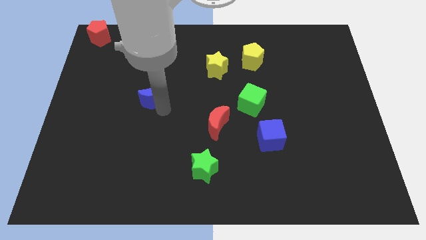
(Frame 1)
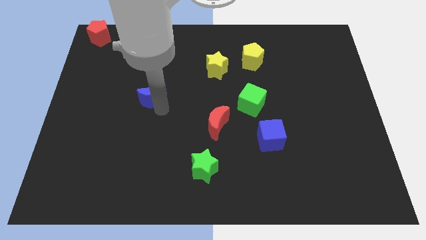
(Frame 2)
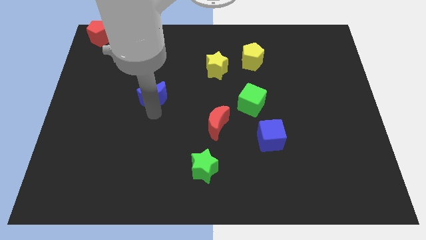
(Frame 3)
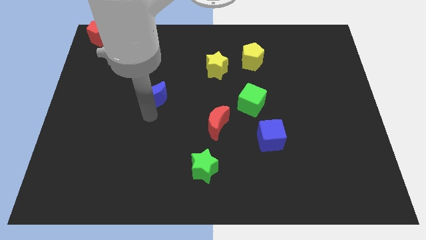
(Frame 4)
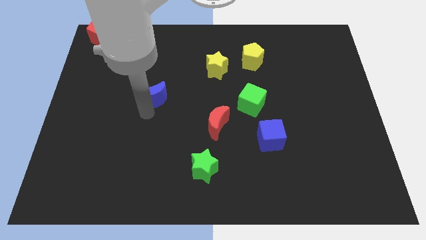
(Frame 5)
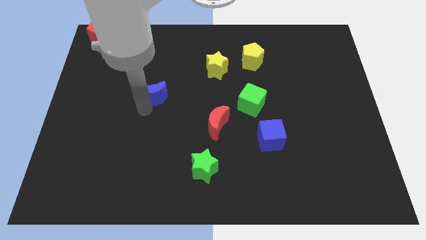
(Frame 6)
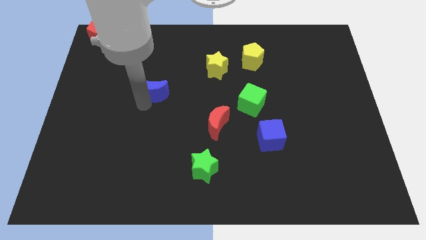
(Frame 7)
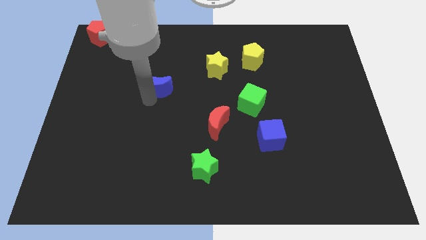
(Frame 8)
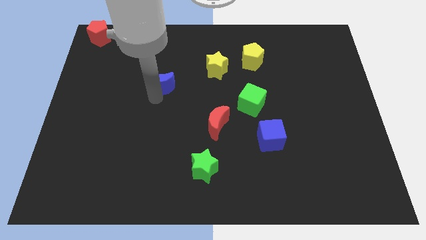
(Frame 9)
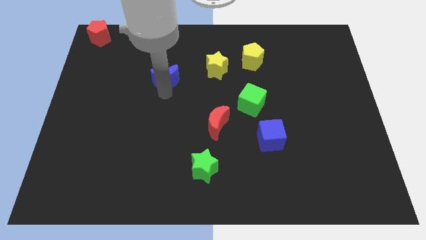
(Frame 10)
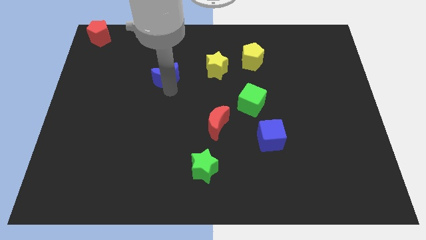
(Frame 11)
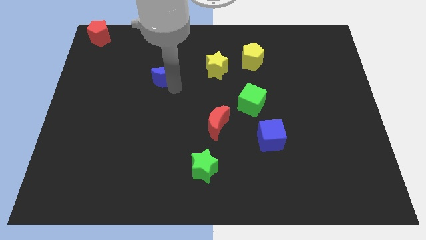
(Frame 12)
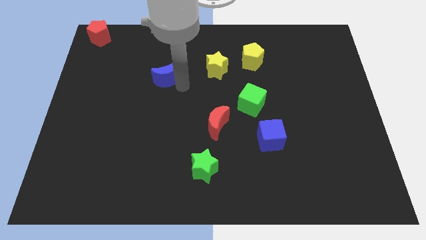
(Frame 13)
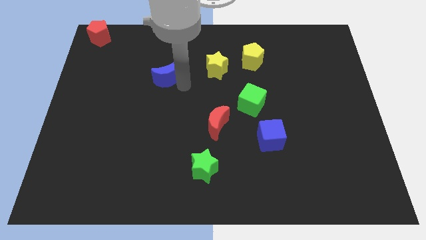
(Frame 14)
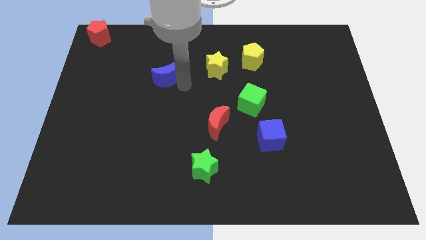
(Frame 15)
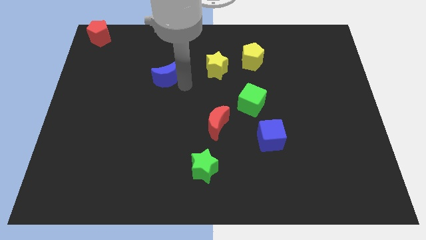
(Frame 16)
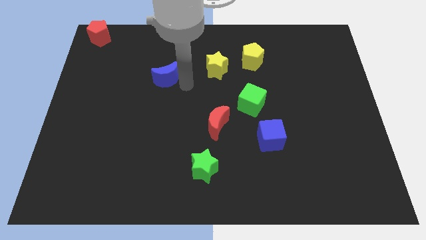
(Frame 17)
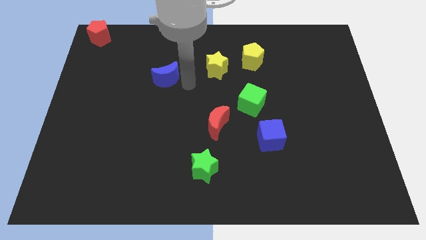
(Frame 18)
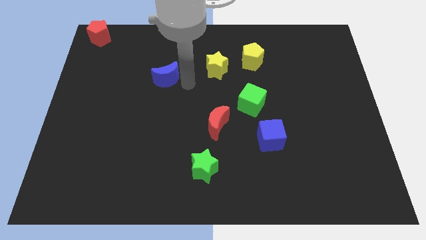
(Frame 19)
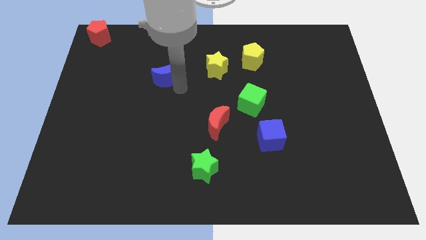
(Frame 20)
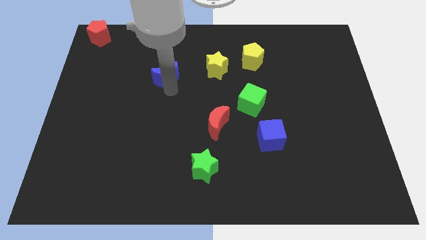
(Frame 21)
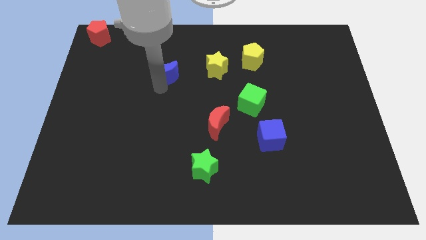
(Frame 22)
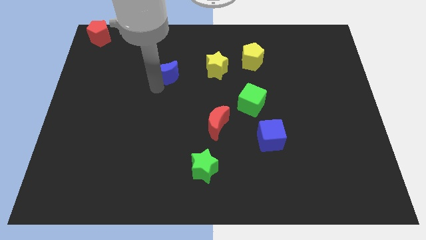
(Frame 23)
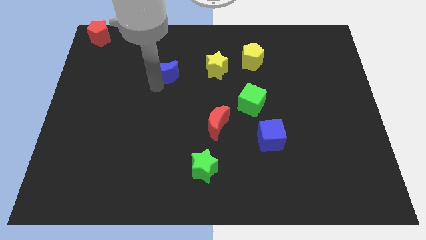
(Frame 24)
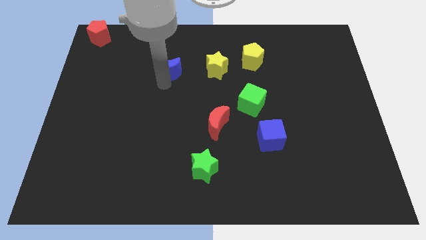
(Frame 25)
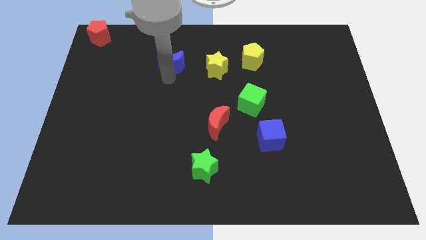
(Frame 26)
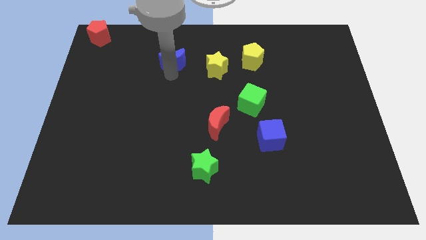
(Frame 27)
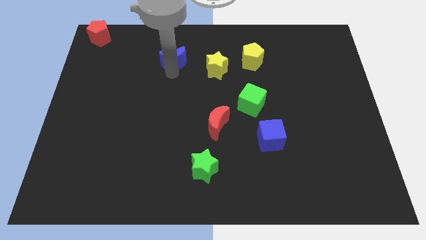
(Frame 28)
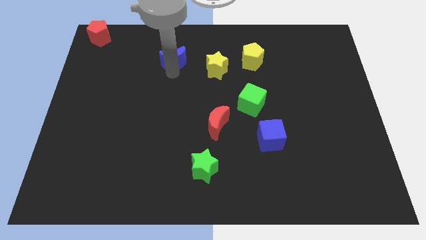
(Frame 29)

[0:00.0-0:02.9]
place the blue crescent parallel to yellow star

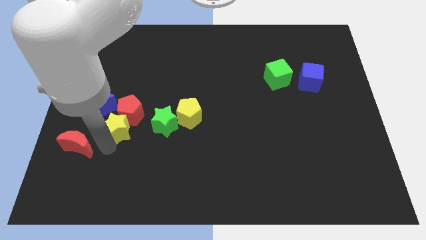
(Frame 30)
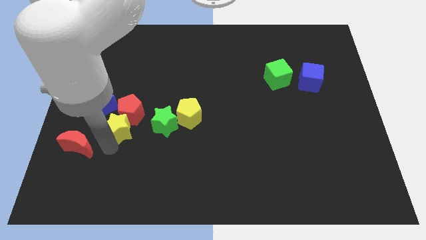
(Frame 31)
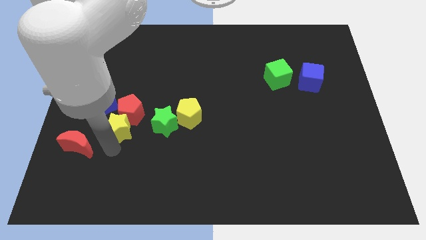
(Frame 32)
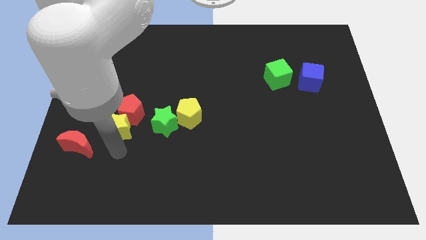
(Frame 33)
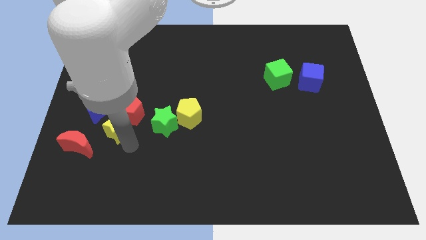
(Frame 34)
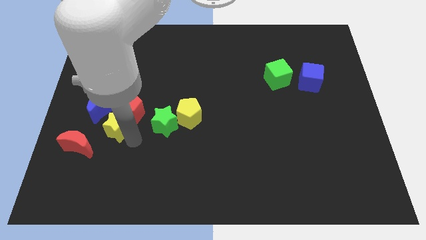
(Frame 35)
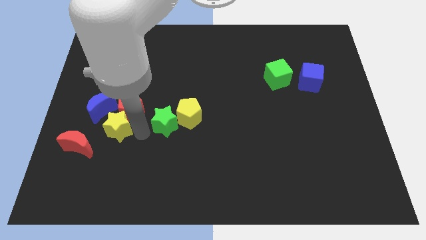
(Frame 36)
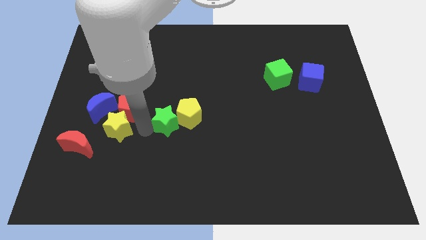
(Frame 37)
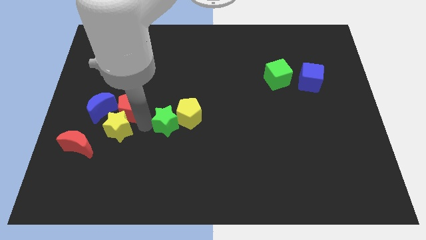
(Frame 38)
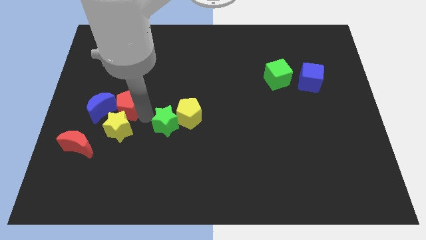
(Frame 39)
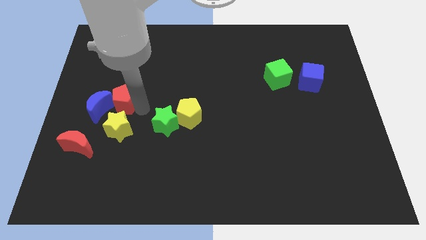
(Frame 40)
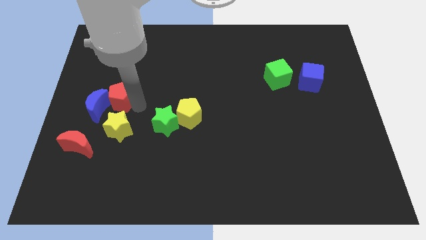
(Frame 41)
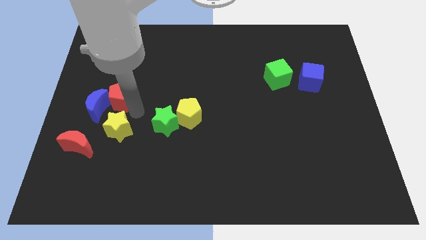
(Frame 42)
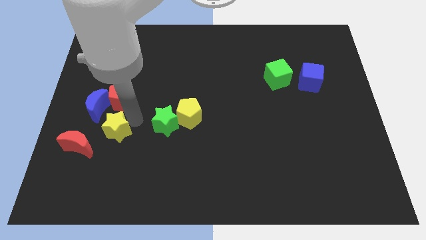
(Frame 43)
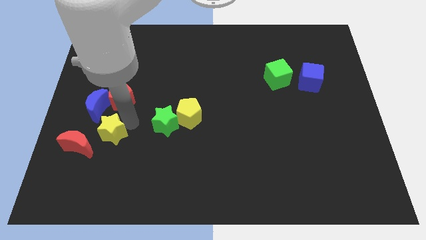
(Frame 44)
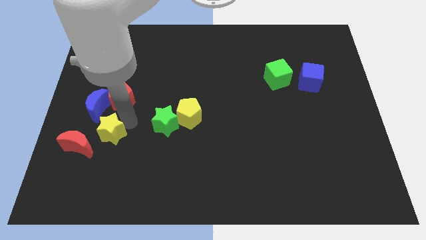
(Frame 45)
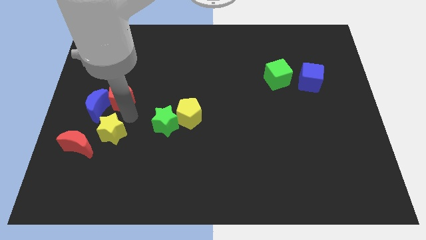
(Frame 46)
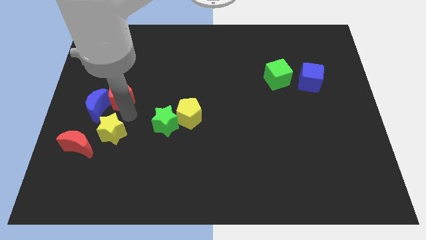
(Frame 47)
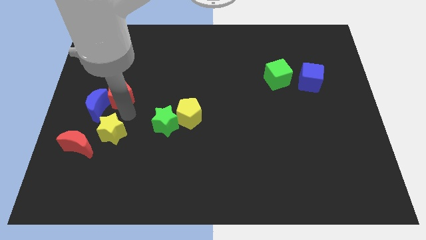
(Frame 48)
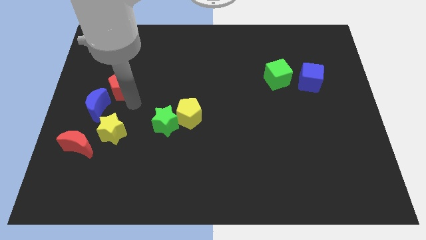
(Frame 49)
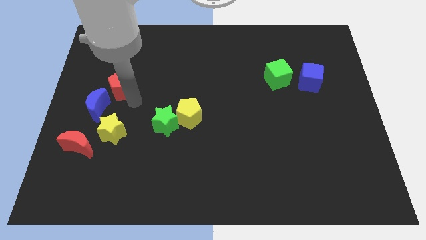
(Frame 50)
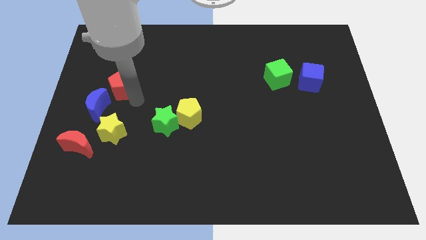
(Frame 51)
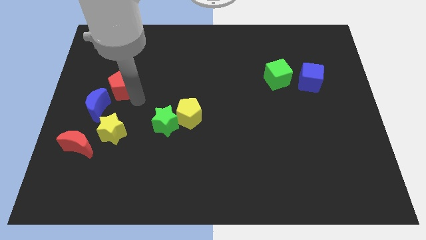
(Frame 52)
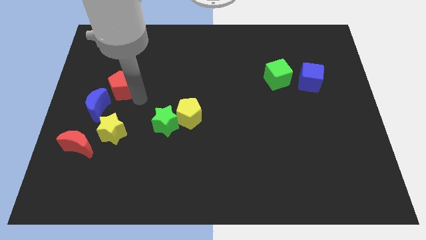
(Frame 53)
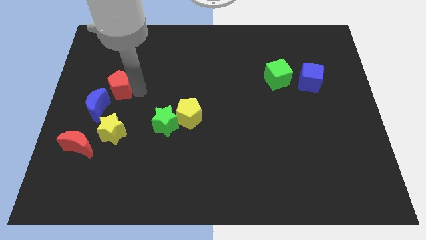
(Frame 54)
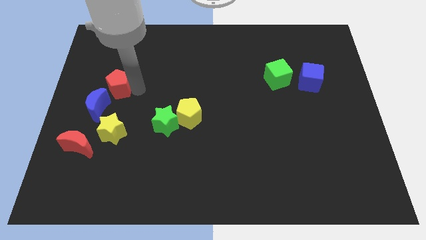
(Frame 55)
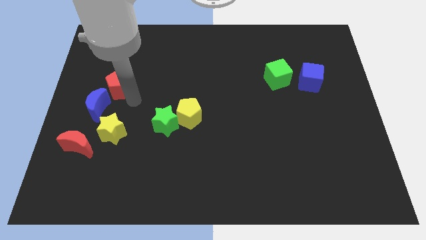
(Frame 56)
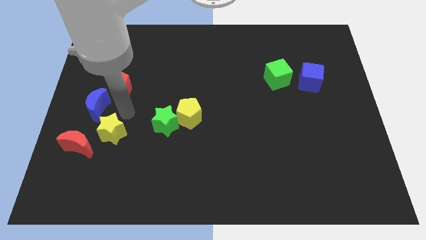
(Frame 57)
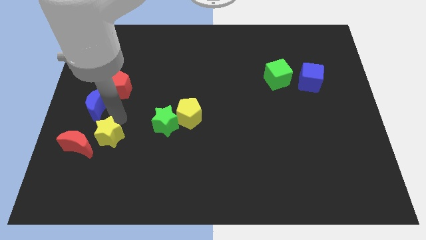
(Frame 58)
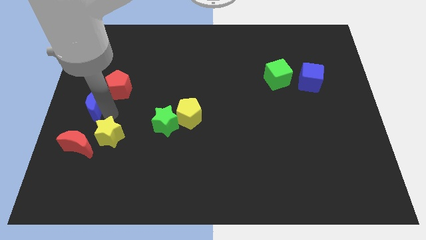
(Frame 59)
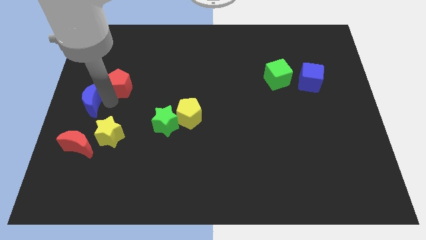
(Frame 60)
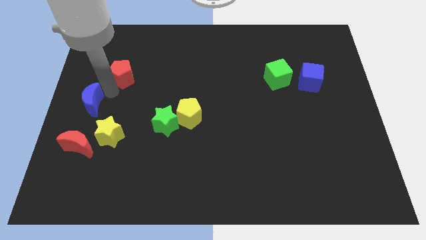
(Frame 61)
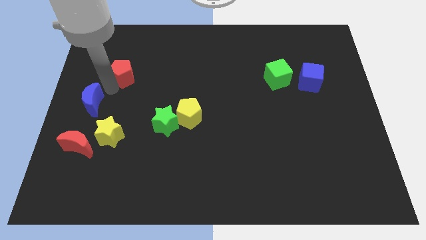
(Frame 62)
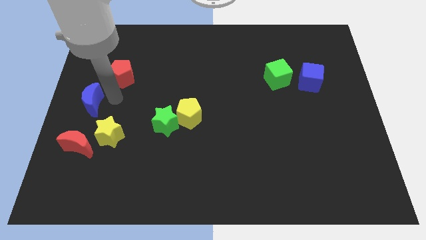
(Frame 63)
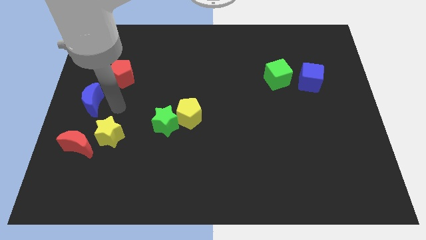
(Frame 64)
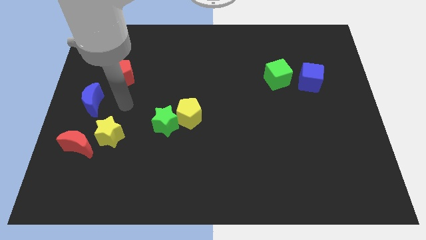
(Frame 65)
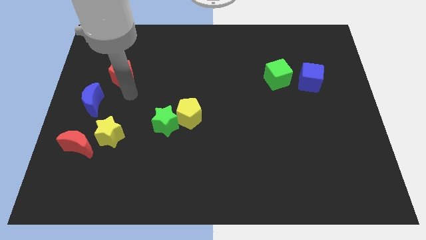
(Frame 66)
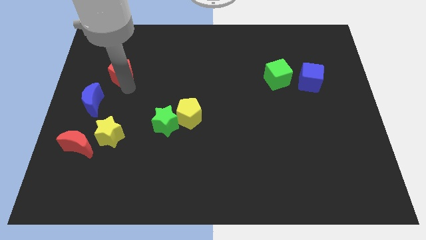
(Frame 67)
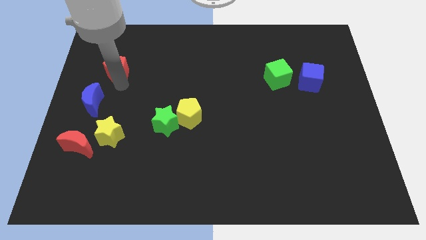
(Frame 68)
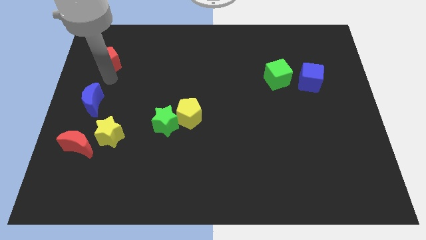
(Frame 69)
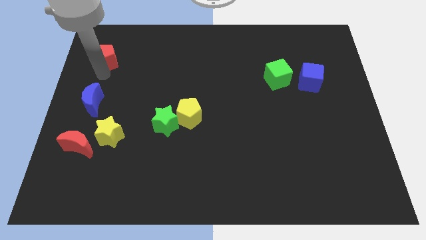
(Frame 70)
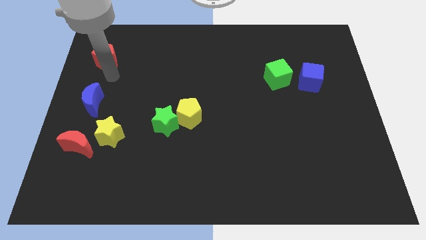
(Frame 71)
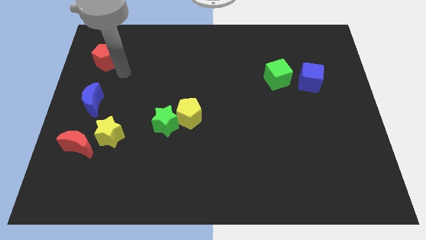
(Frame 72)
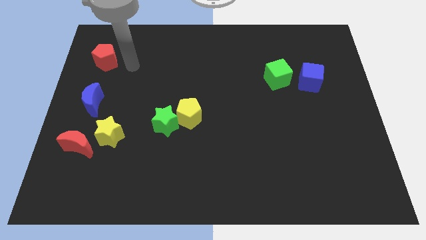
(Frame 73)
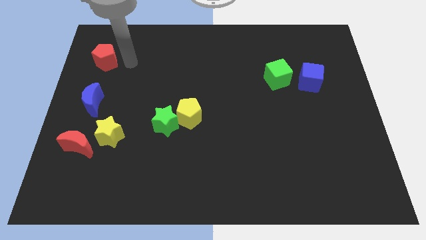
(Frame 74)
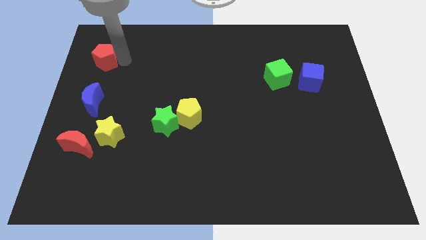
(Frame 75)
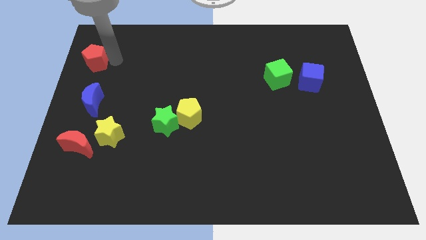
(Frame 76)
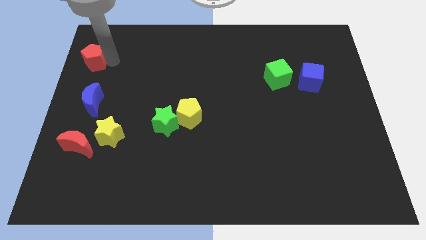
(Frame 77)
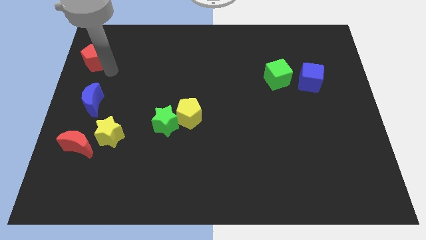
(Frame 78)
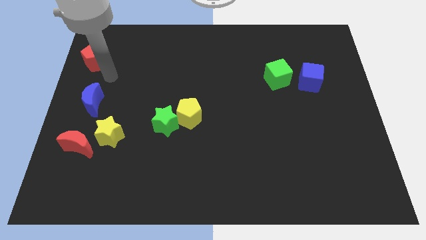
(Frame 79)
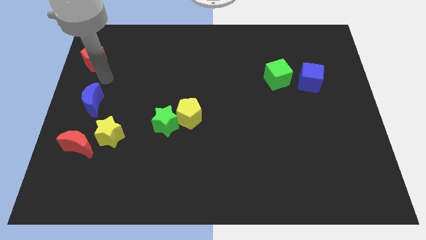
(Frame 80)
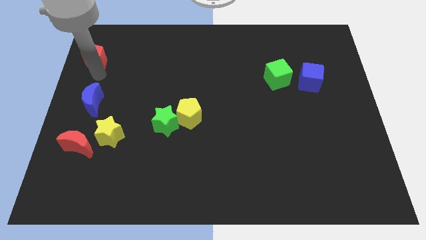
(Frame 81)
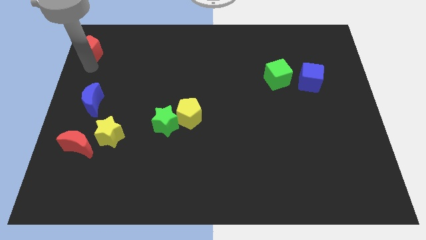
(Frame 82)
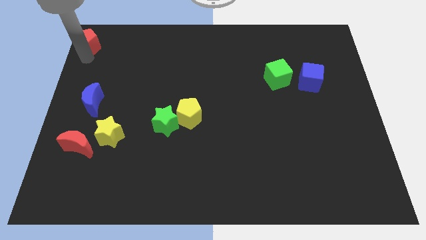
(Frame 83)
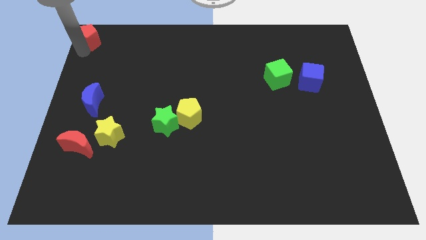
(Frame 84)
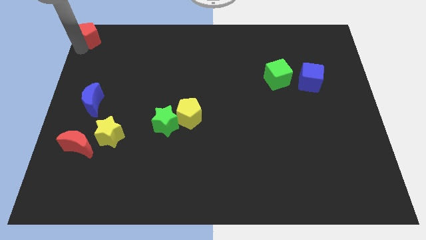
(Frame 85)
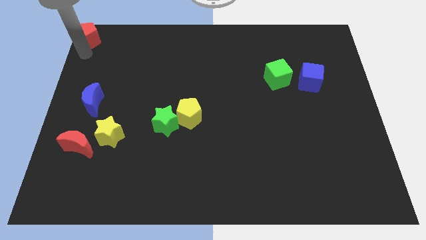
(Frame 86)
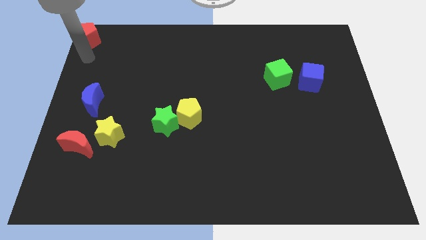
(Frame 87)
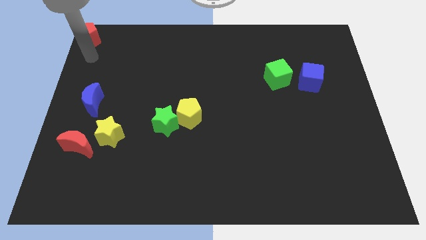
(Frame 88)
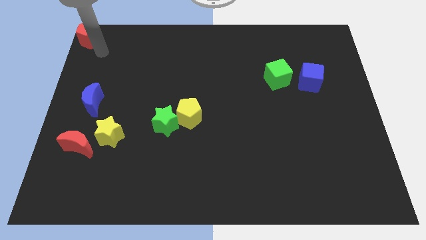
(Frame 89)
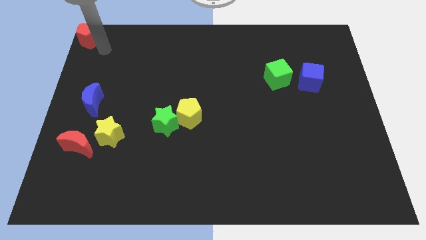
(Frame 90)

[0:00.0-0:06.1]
move the red pentagon to the top left corner
